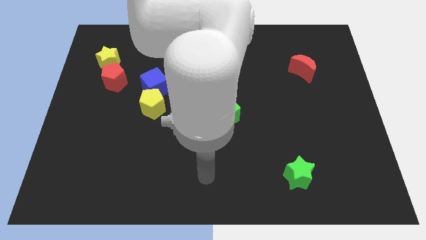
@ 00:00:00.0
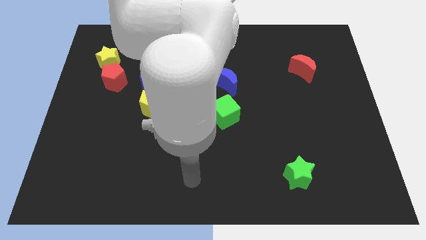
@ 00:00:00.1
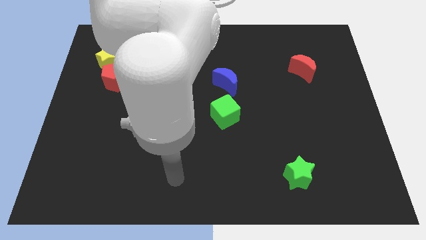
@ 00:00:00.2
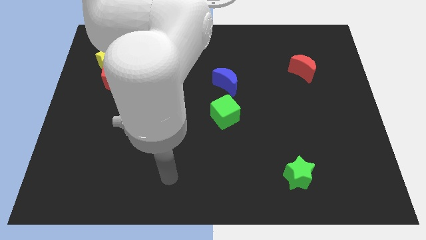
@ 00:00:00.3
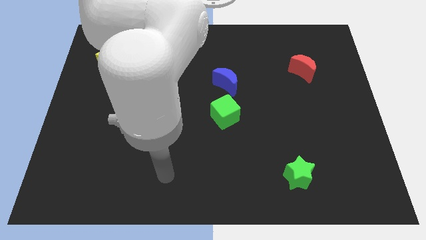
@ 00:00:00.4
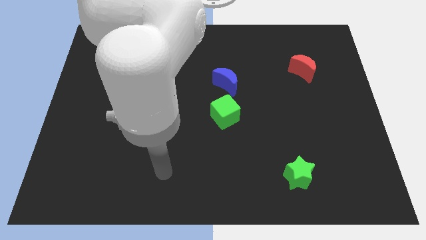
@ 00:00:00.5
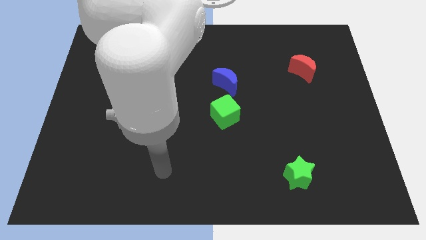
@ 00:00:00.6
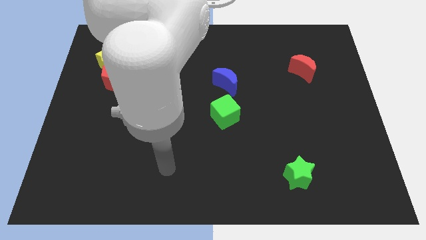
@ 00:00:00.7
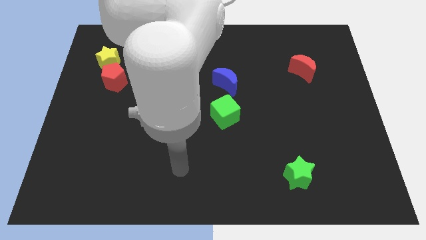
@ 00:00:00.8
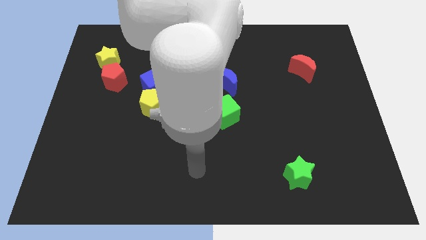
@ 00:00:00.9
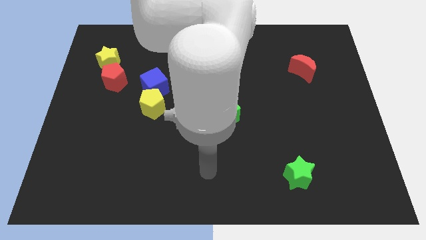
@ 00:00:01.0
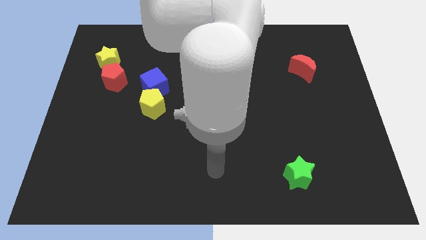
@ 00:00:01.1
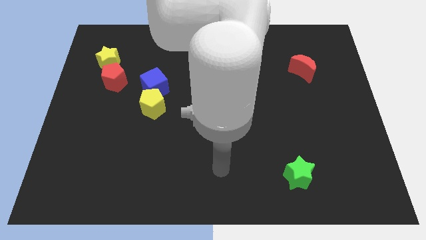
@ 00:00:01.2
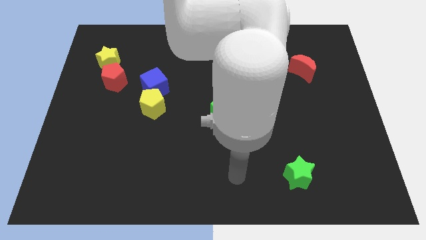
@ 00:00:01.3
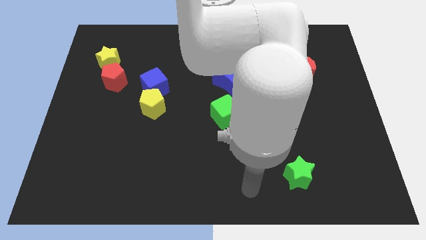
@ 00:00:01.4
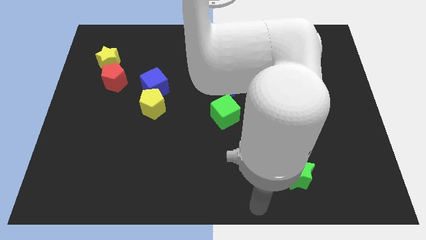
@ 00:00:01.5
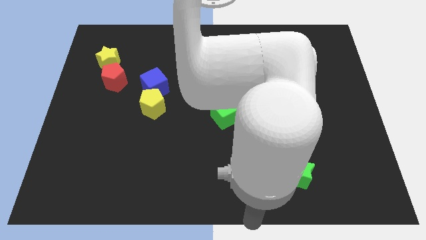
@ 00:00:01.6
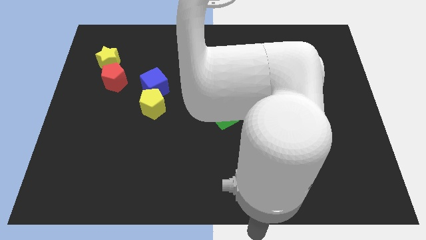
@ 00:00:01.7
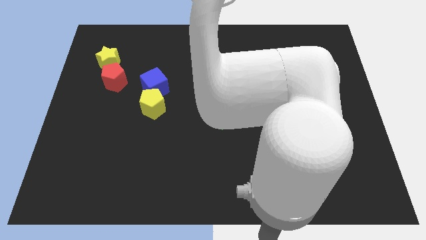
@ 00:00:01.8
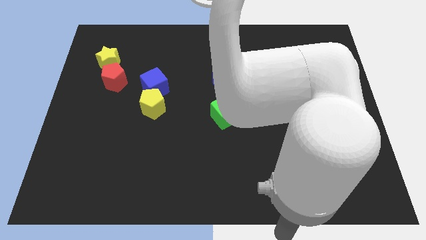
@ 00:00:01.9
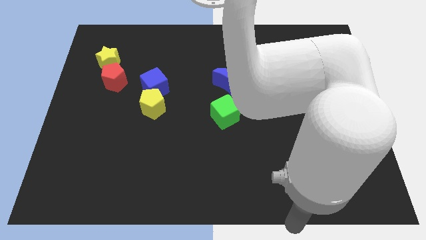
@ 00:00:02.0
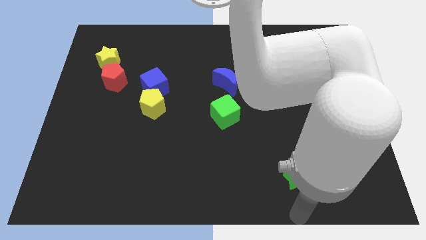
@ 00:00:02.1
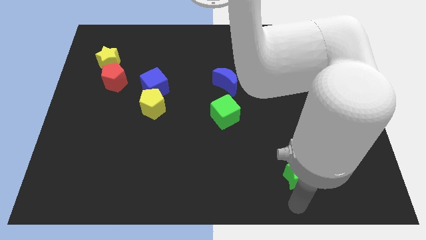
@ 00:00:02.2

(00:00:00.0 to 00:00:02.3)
point your hand below the green star

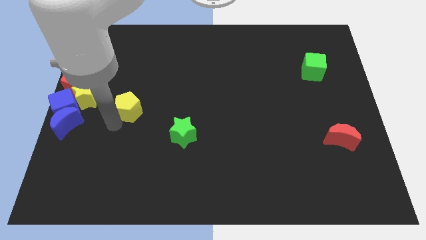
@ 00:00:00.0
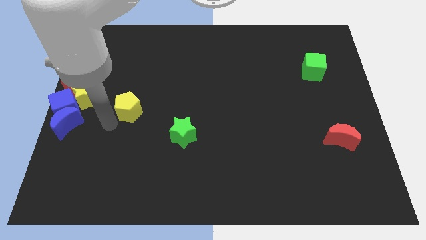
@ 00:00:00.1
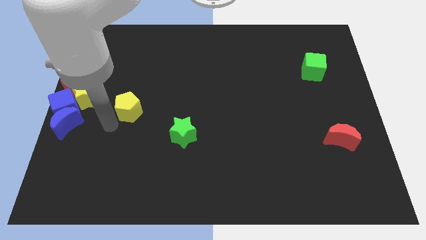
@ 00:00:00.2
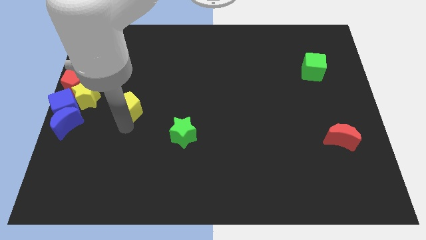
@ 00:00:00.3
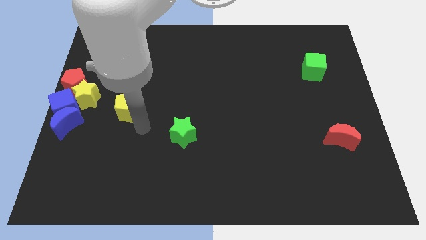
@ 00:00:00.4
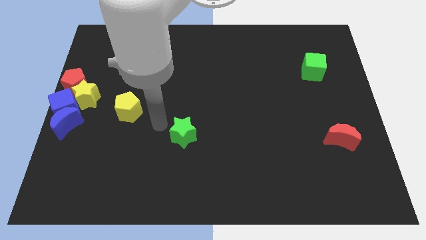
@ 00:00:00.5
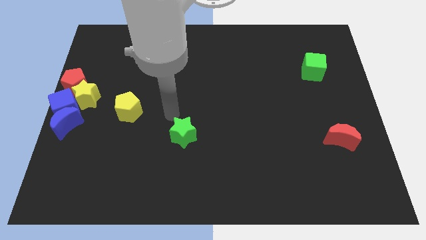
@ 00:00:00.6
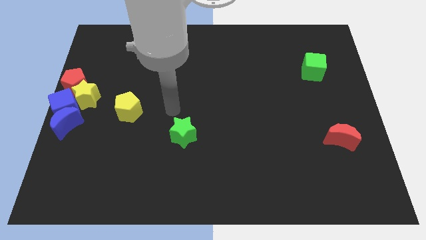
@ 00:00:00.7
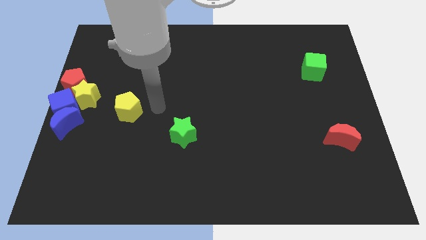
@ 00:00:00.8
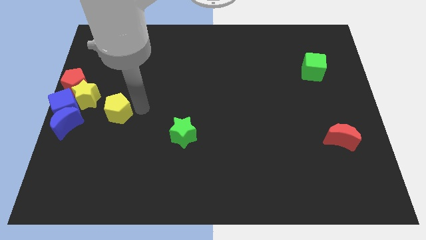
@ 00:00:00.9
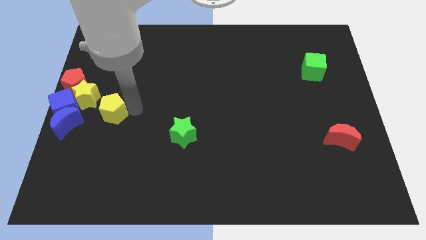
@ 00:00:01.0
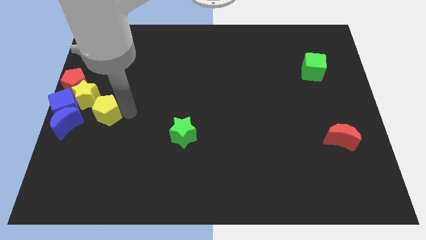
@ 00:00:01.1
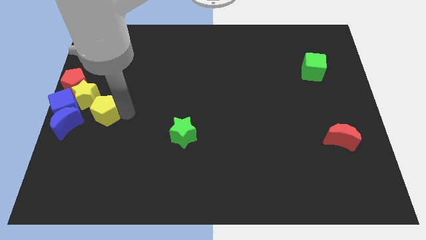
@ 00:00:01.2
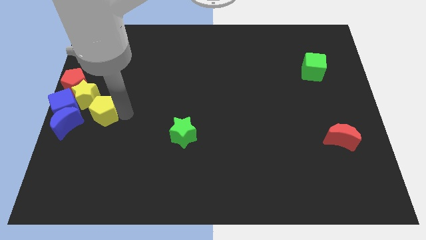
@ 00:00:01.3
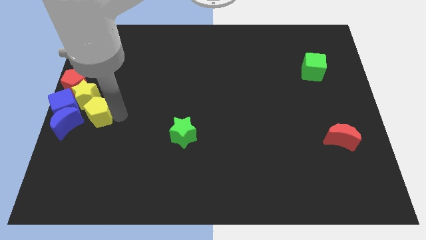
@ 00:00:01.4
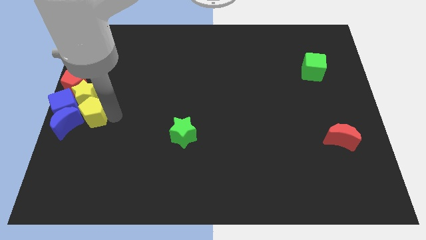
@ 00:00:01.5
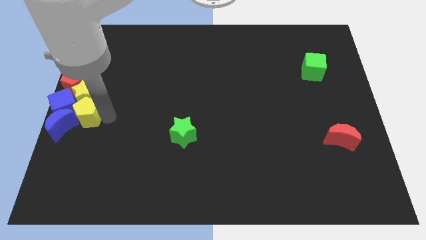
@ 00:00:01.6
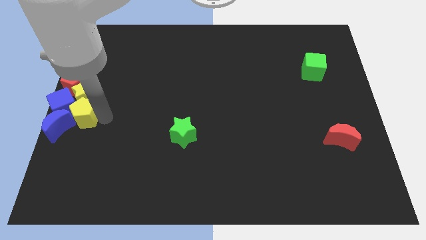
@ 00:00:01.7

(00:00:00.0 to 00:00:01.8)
slide the yellow pentagon into the group of blocks

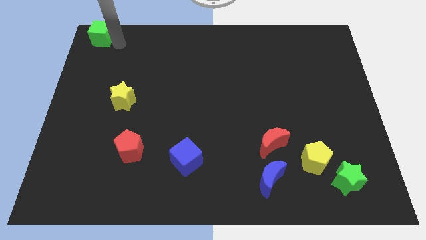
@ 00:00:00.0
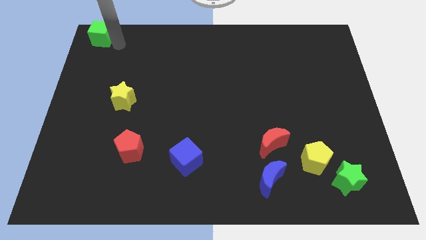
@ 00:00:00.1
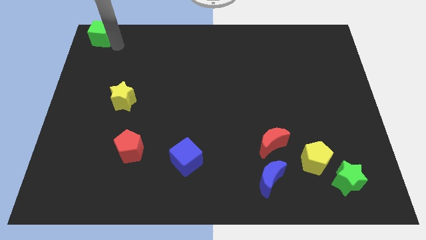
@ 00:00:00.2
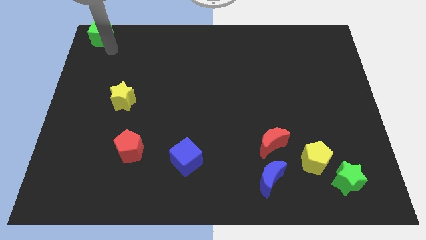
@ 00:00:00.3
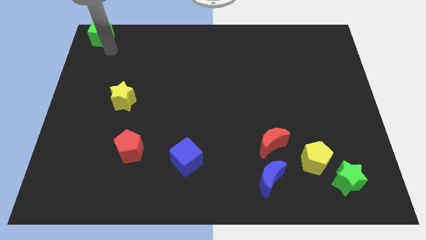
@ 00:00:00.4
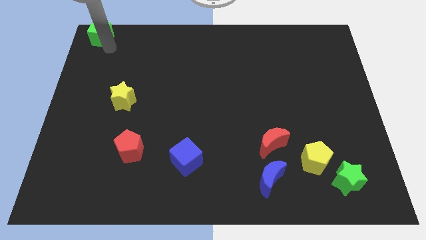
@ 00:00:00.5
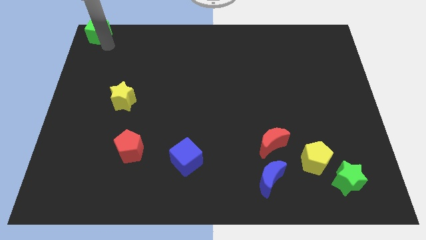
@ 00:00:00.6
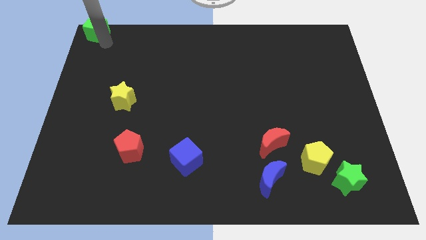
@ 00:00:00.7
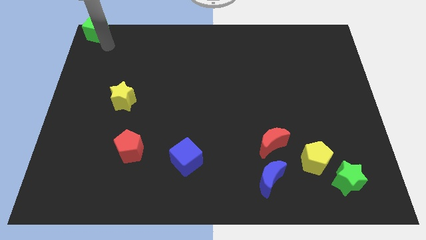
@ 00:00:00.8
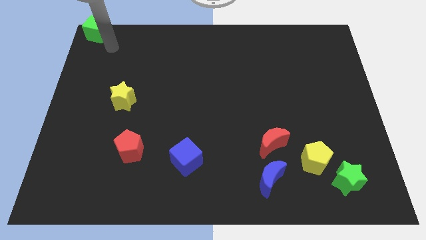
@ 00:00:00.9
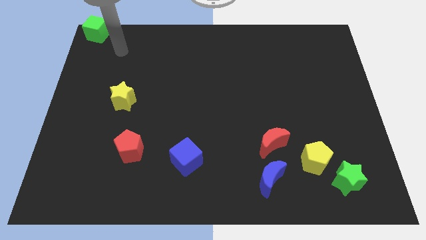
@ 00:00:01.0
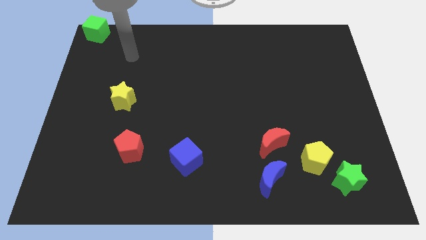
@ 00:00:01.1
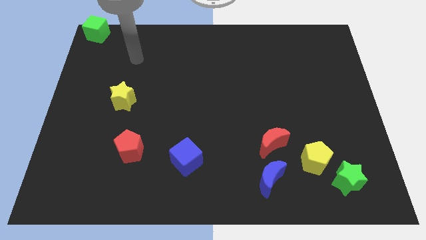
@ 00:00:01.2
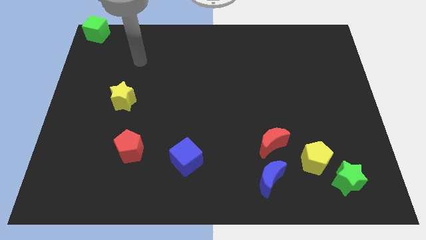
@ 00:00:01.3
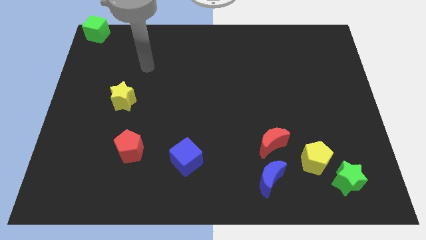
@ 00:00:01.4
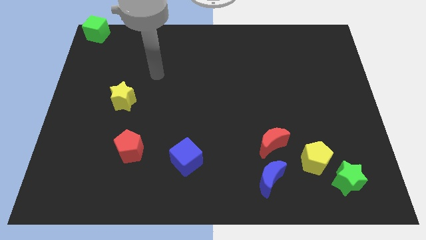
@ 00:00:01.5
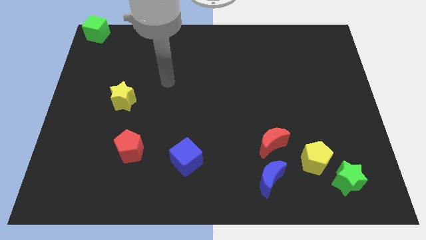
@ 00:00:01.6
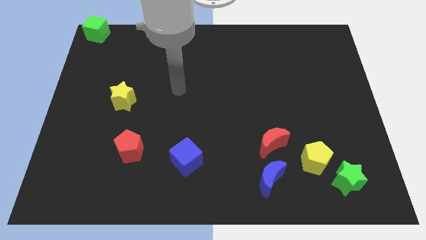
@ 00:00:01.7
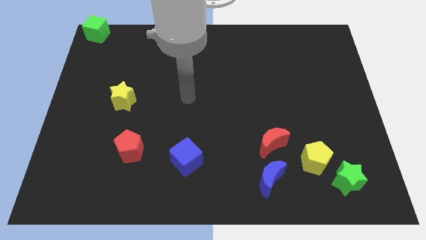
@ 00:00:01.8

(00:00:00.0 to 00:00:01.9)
place the green cube at the top left corner of the board

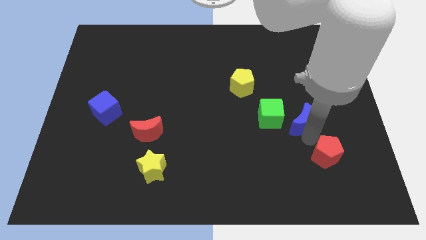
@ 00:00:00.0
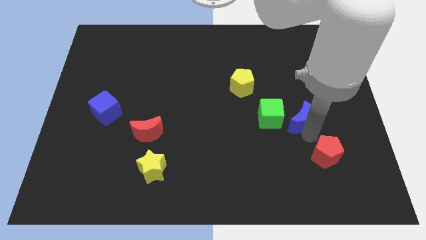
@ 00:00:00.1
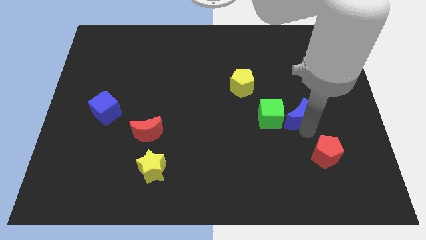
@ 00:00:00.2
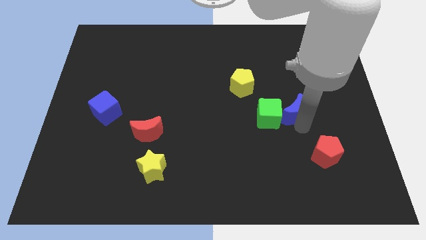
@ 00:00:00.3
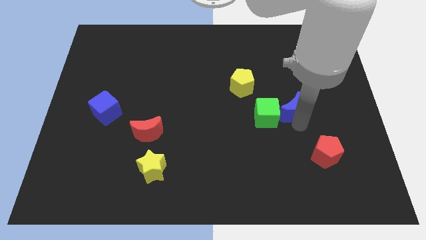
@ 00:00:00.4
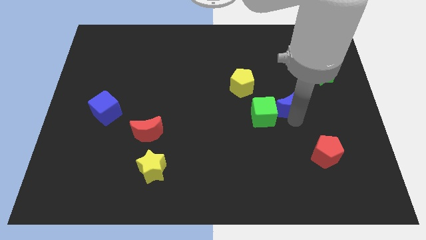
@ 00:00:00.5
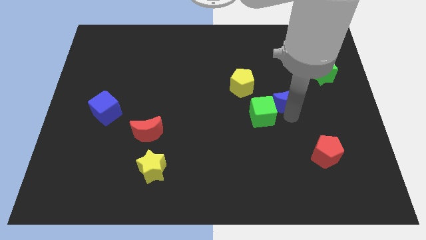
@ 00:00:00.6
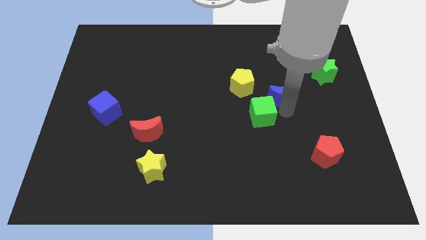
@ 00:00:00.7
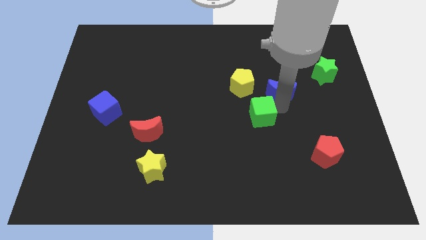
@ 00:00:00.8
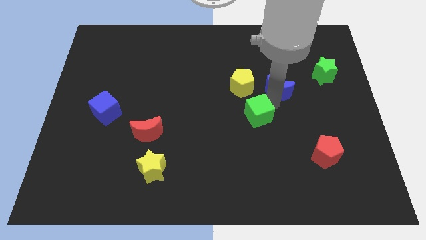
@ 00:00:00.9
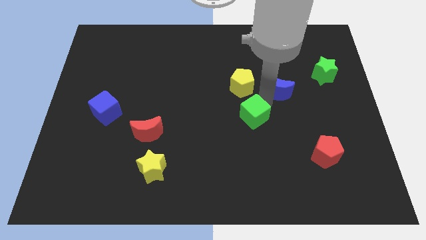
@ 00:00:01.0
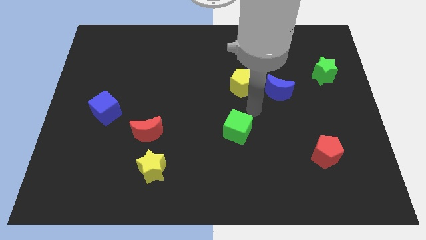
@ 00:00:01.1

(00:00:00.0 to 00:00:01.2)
move the blue moon to the right of the yellow pentagon

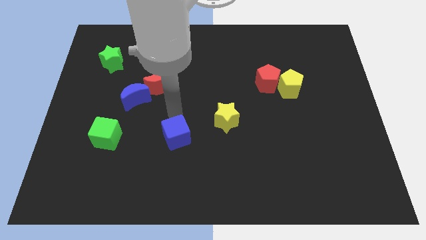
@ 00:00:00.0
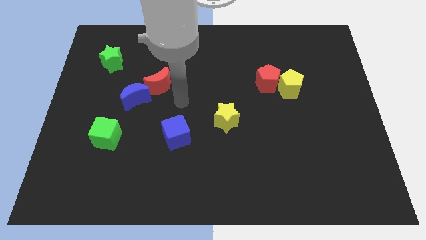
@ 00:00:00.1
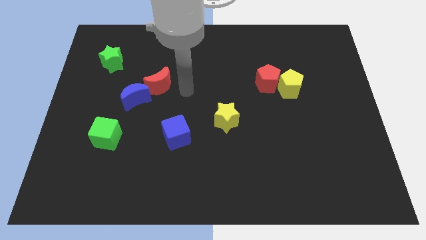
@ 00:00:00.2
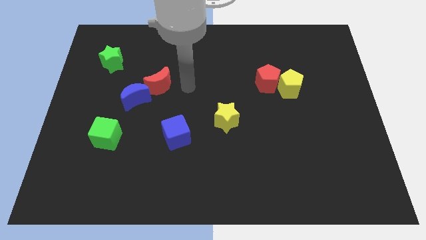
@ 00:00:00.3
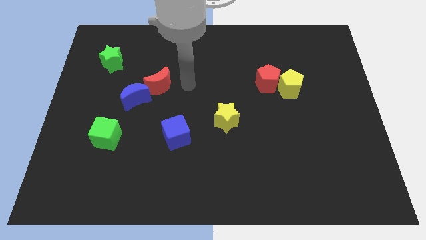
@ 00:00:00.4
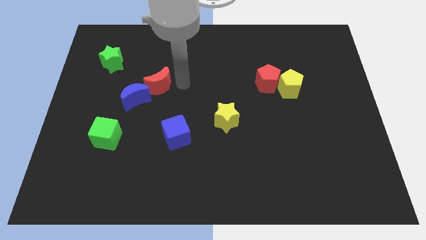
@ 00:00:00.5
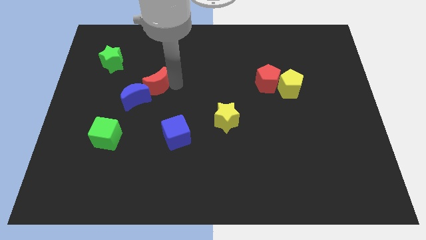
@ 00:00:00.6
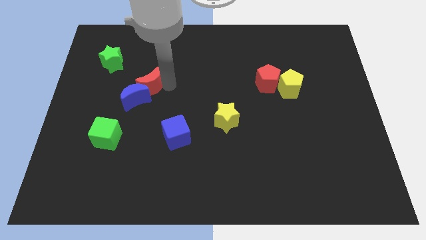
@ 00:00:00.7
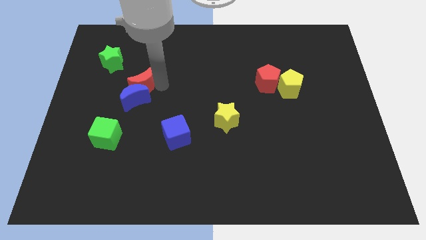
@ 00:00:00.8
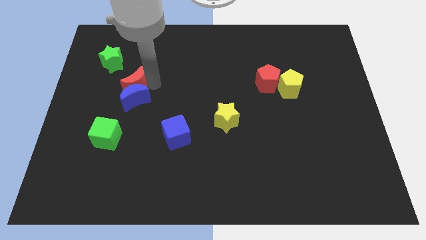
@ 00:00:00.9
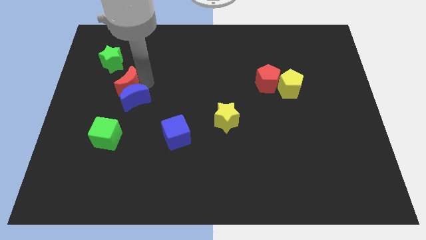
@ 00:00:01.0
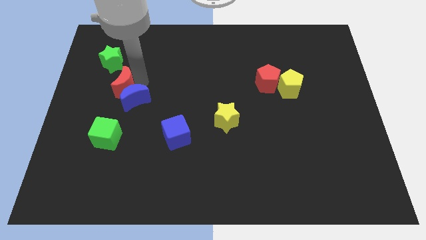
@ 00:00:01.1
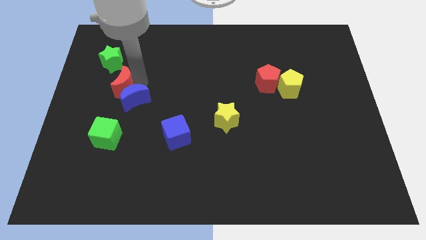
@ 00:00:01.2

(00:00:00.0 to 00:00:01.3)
place the red crescent diagonally in between the blue crescent and green star

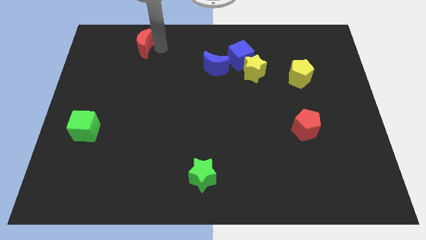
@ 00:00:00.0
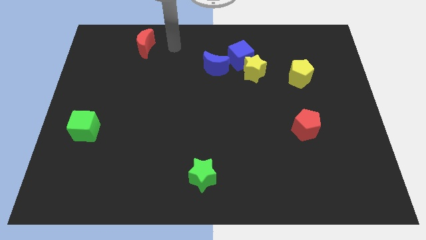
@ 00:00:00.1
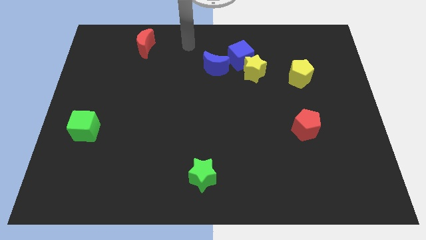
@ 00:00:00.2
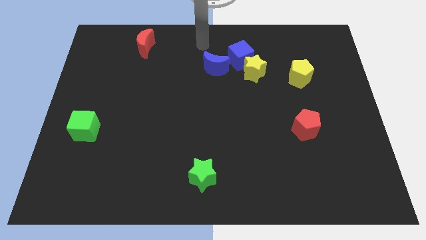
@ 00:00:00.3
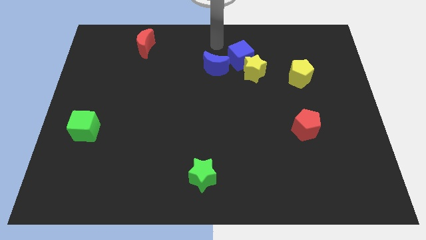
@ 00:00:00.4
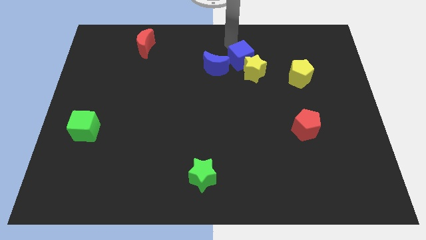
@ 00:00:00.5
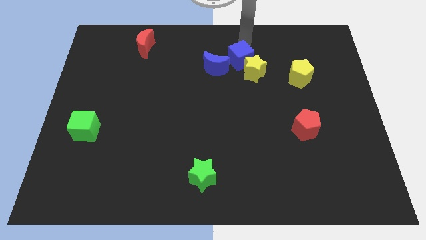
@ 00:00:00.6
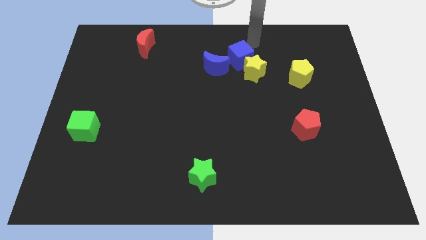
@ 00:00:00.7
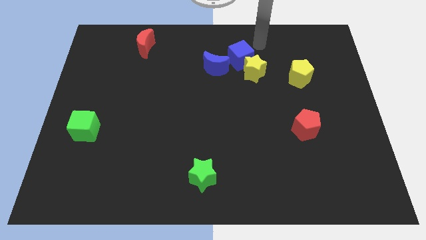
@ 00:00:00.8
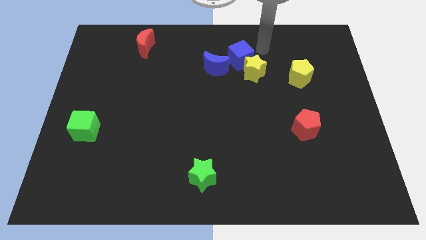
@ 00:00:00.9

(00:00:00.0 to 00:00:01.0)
move your arm to the top of the yellow star
